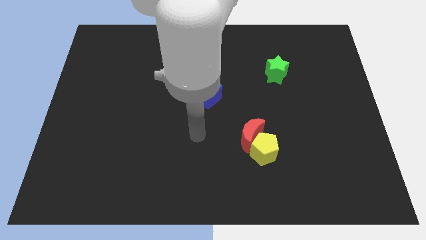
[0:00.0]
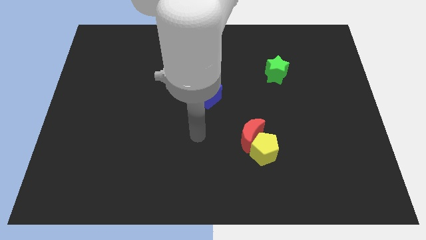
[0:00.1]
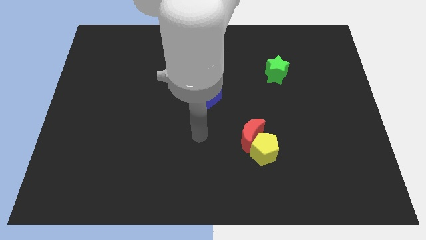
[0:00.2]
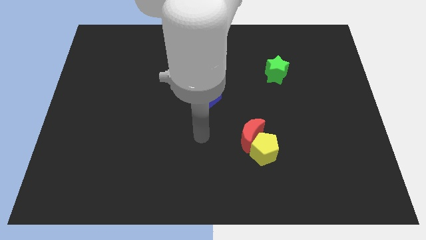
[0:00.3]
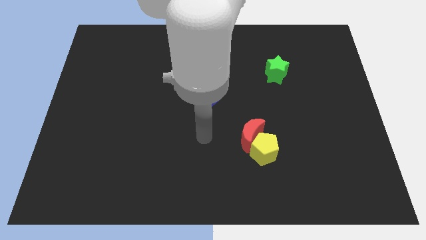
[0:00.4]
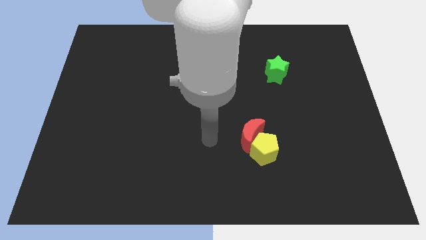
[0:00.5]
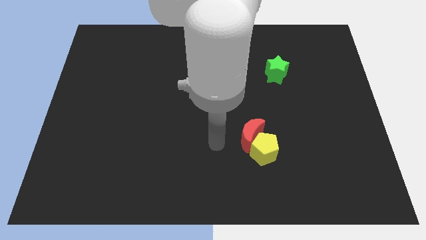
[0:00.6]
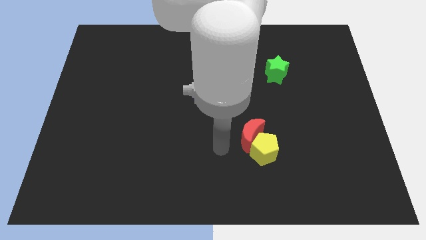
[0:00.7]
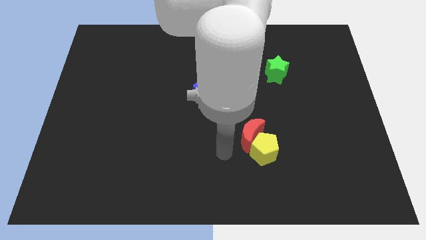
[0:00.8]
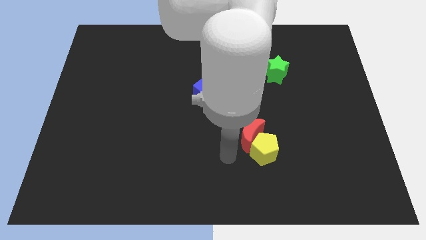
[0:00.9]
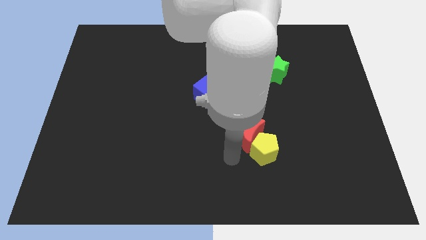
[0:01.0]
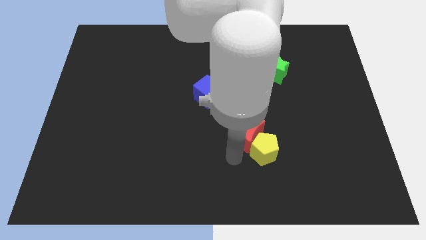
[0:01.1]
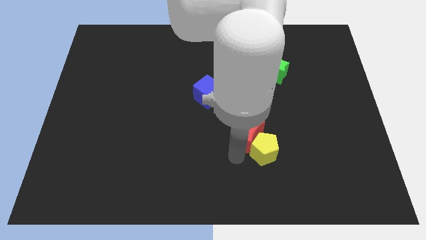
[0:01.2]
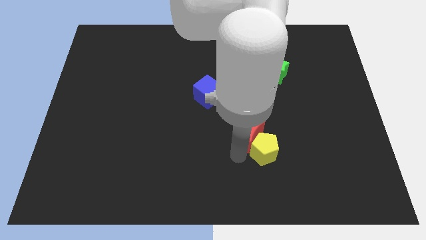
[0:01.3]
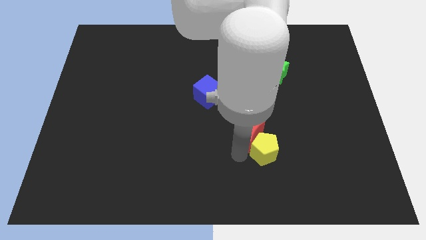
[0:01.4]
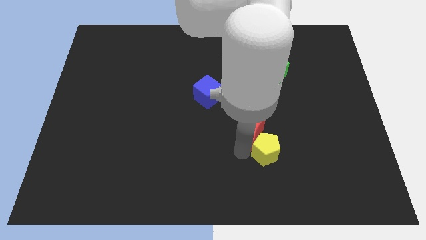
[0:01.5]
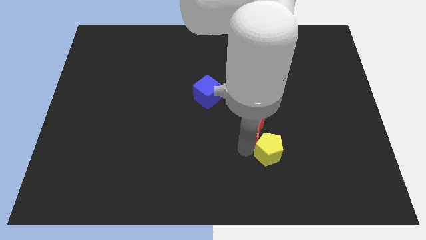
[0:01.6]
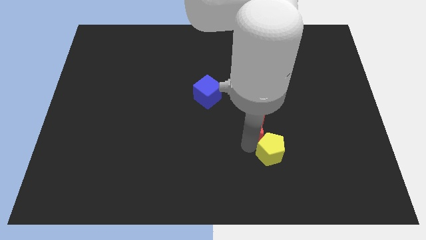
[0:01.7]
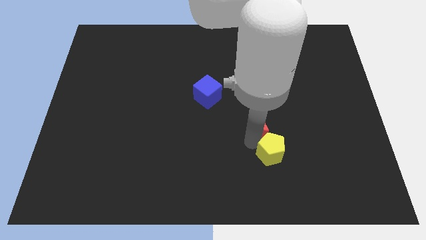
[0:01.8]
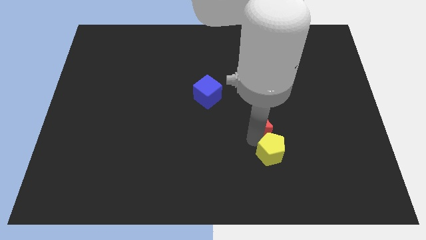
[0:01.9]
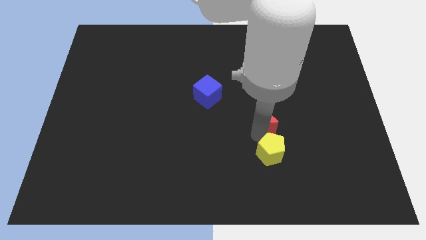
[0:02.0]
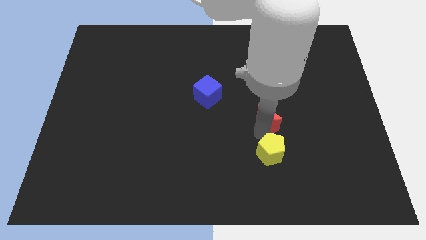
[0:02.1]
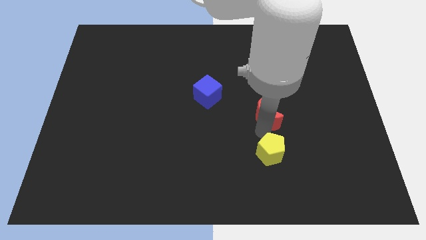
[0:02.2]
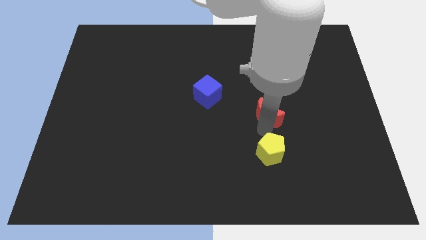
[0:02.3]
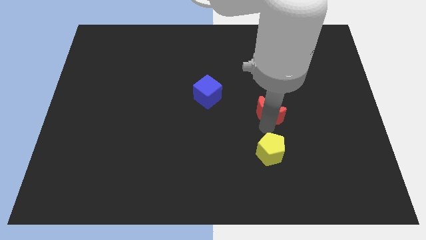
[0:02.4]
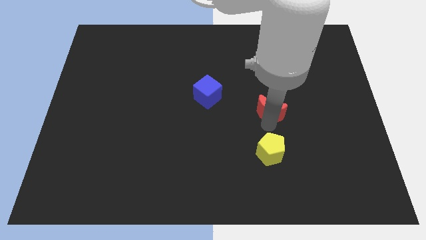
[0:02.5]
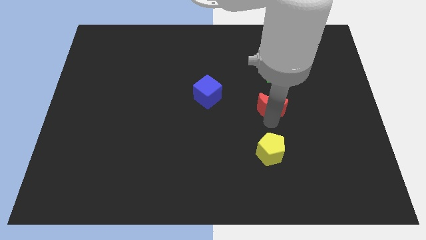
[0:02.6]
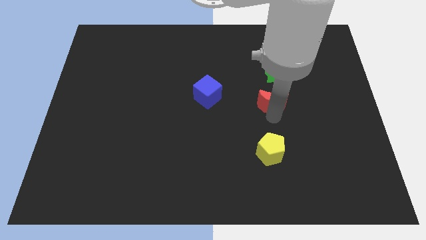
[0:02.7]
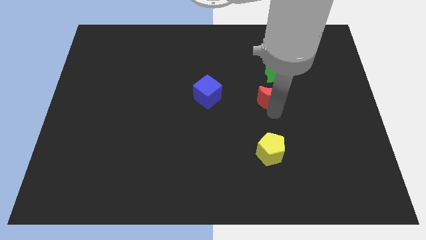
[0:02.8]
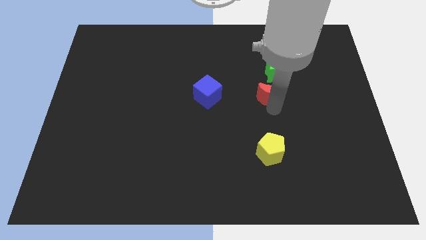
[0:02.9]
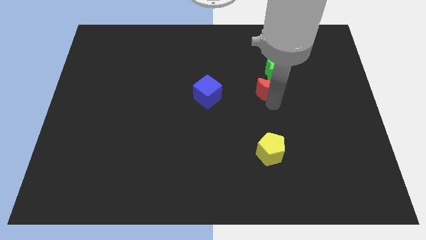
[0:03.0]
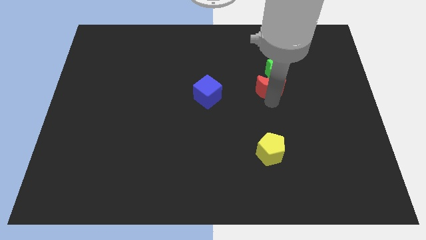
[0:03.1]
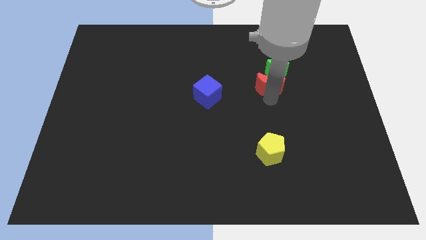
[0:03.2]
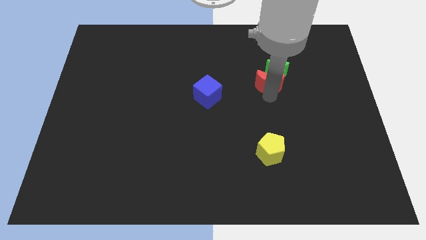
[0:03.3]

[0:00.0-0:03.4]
slide the red moon towards the green block

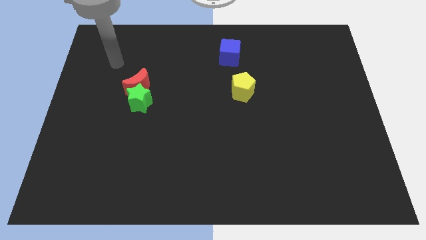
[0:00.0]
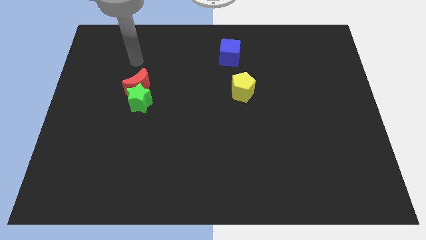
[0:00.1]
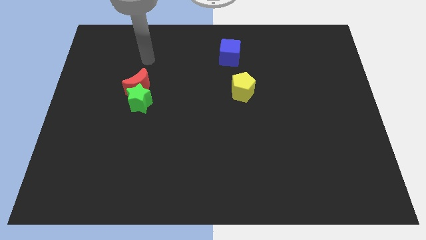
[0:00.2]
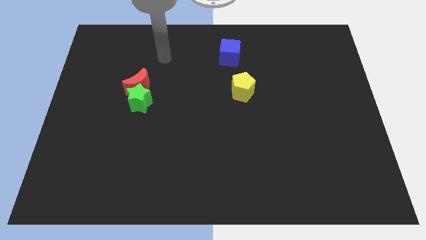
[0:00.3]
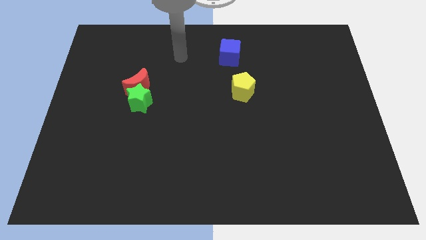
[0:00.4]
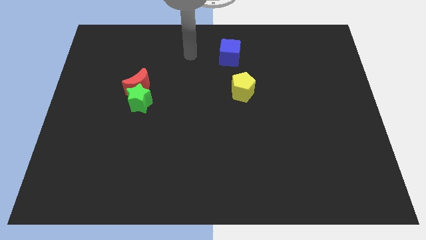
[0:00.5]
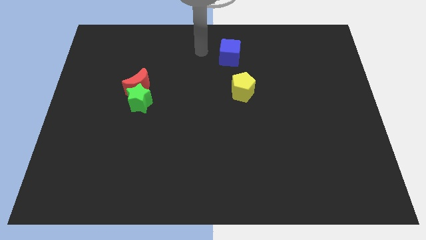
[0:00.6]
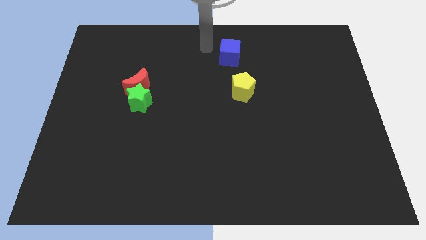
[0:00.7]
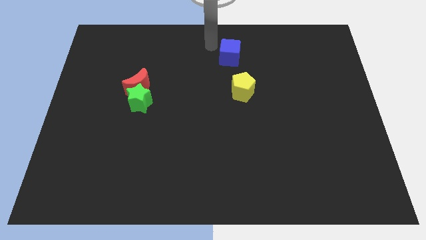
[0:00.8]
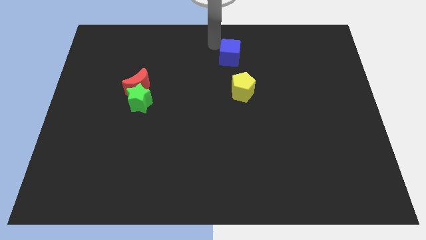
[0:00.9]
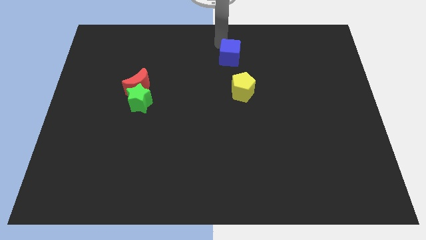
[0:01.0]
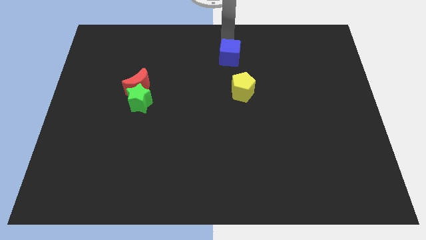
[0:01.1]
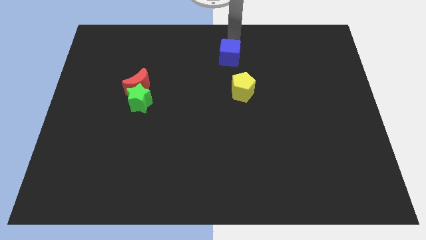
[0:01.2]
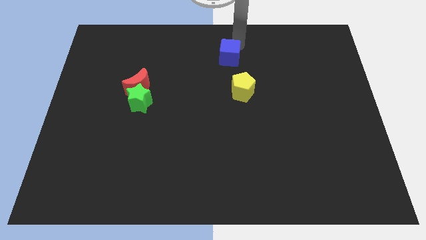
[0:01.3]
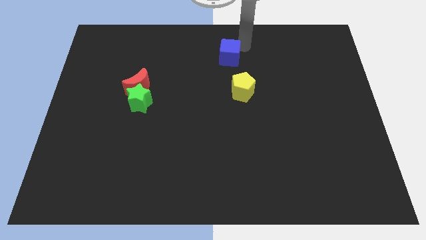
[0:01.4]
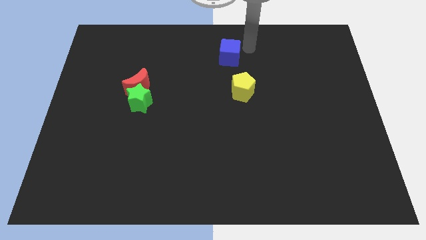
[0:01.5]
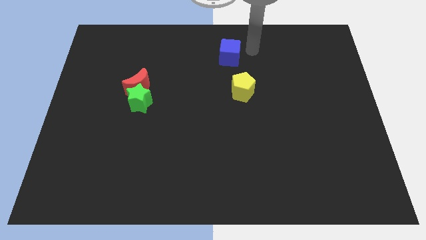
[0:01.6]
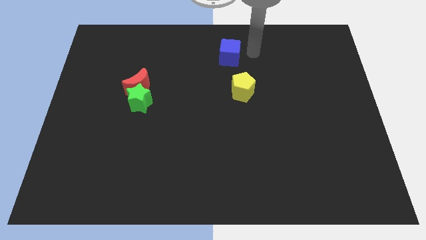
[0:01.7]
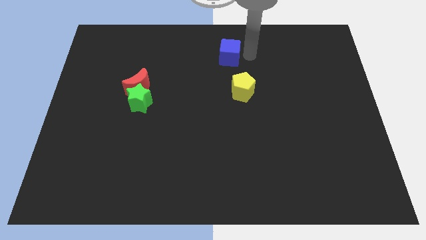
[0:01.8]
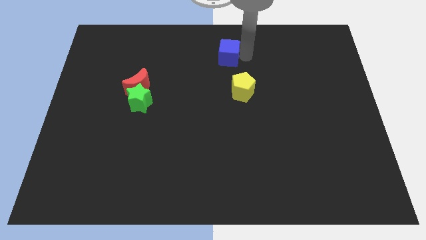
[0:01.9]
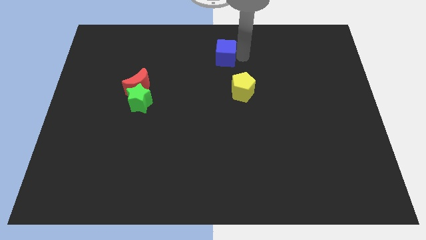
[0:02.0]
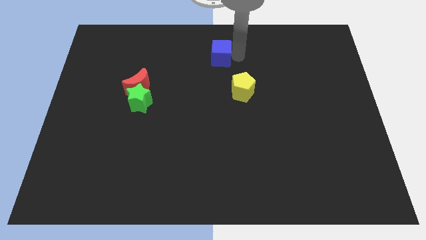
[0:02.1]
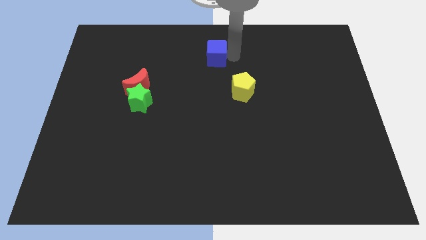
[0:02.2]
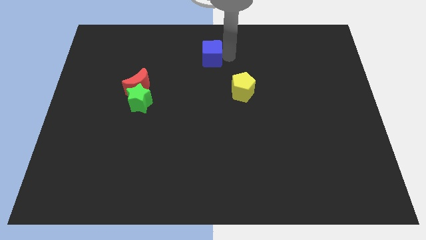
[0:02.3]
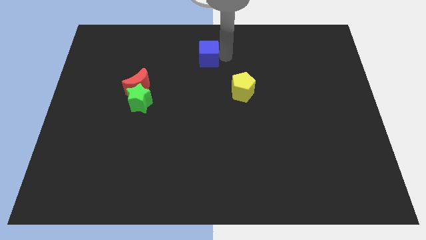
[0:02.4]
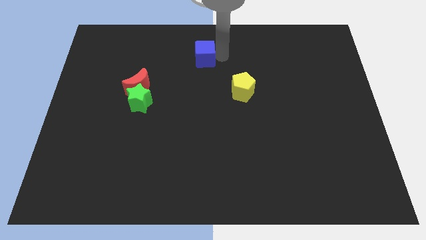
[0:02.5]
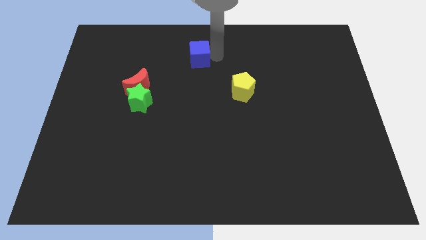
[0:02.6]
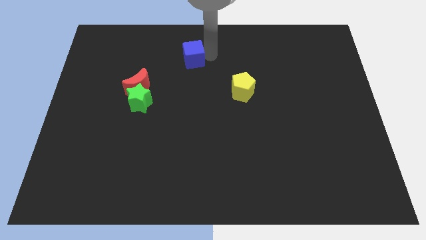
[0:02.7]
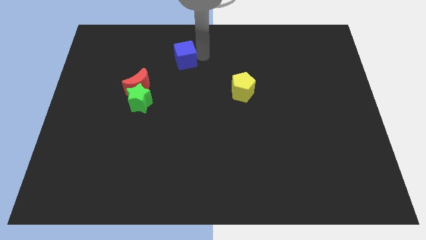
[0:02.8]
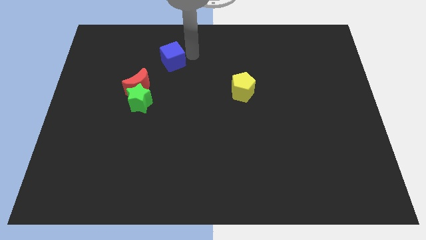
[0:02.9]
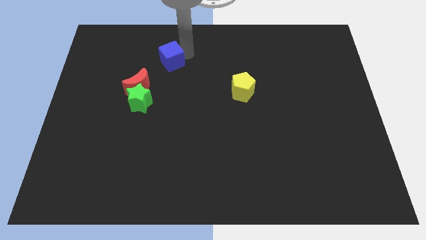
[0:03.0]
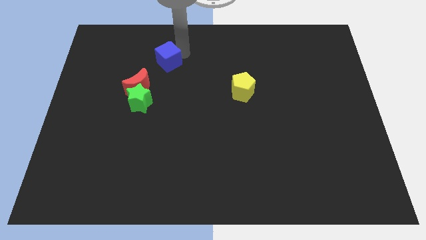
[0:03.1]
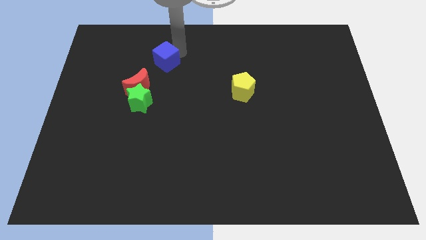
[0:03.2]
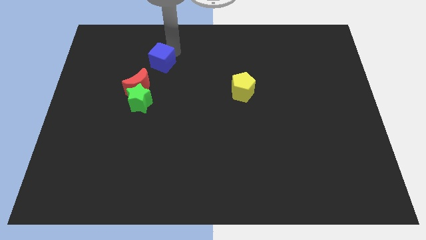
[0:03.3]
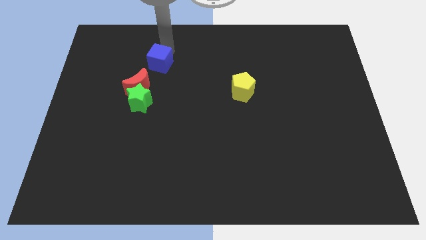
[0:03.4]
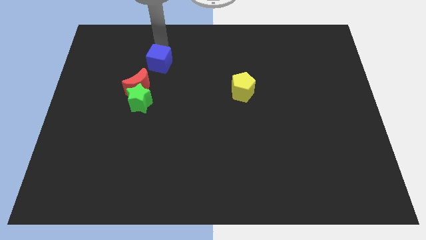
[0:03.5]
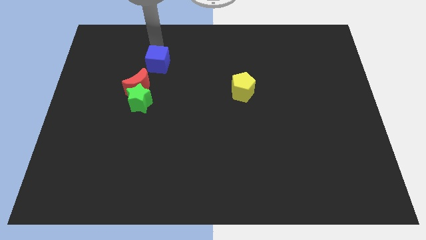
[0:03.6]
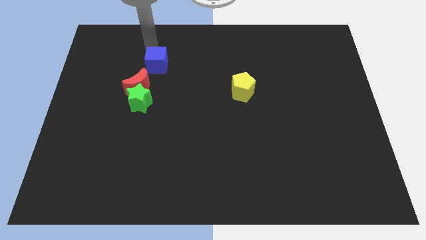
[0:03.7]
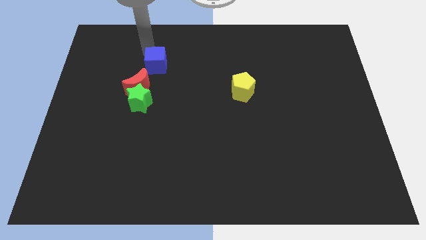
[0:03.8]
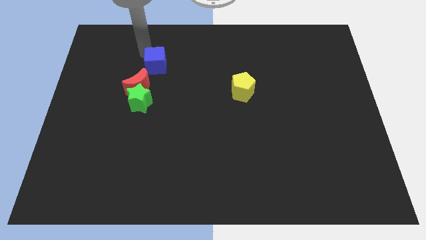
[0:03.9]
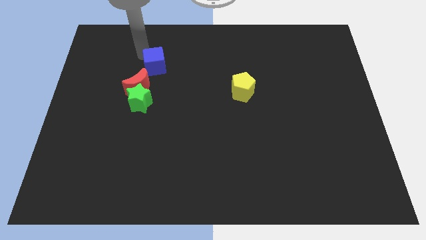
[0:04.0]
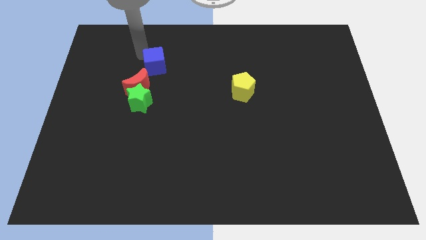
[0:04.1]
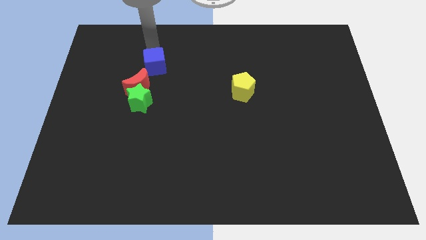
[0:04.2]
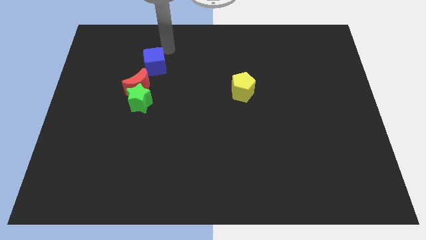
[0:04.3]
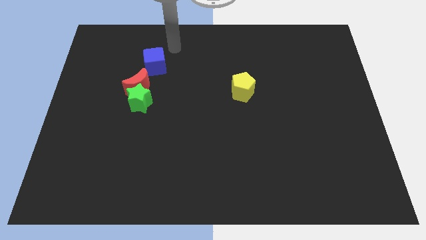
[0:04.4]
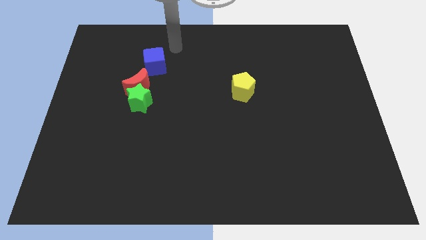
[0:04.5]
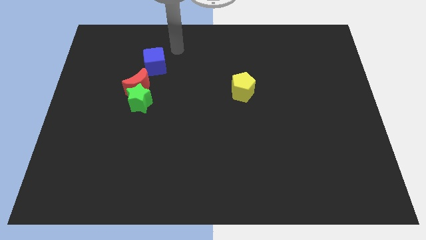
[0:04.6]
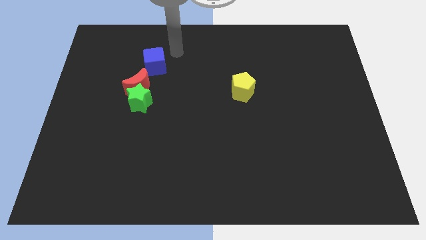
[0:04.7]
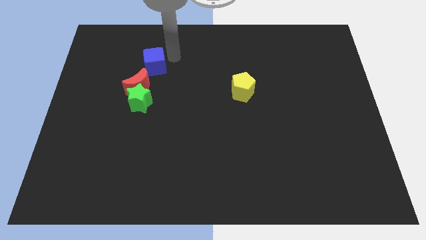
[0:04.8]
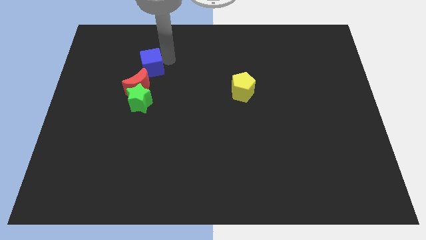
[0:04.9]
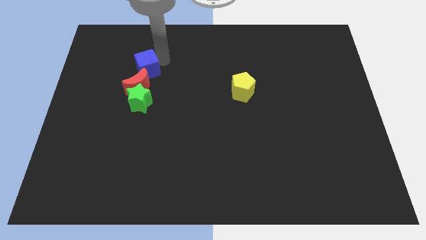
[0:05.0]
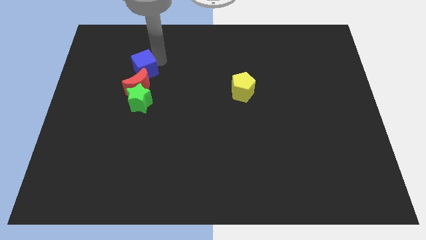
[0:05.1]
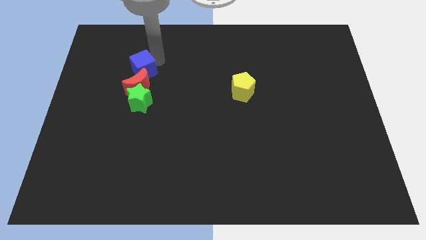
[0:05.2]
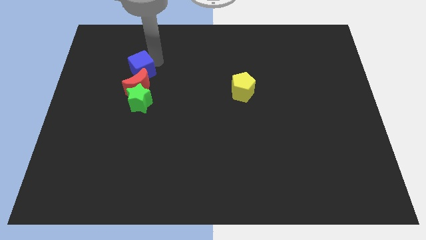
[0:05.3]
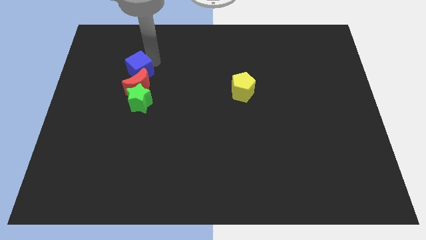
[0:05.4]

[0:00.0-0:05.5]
put the cube to the red moon
